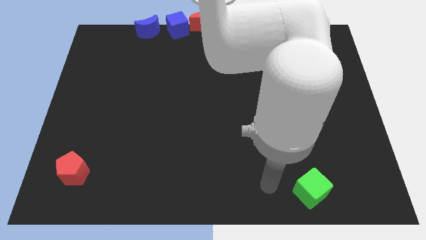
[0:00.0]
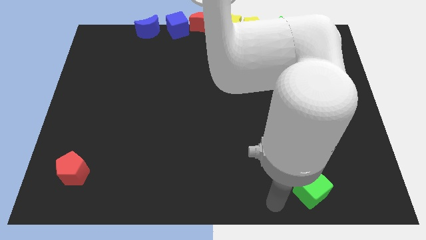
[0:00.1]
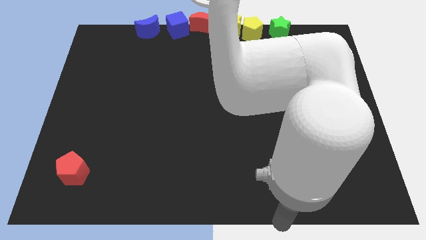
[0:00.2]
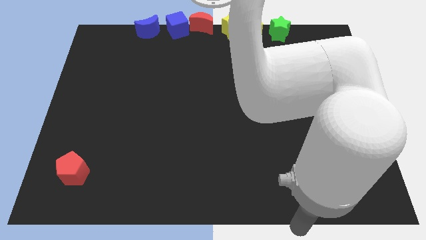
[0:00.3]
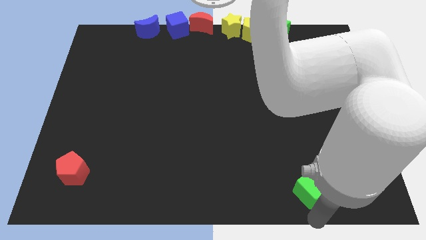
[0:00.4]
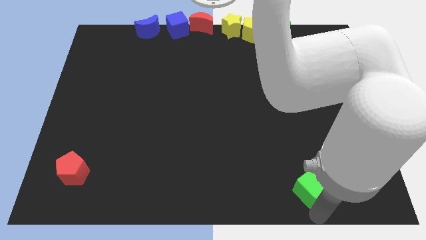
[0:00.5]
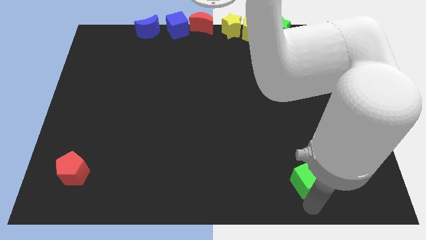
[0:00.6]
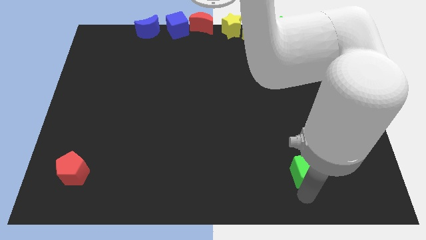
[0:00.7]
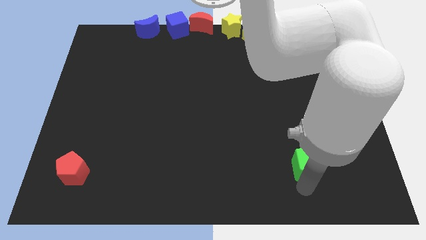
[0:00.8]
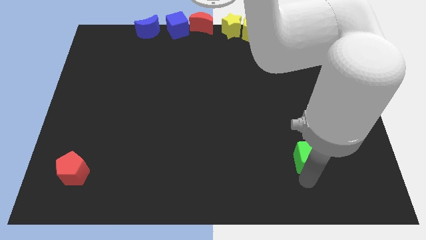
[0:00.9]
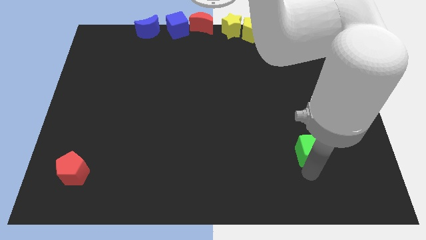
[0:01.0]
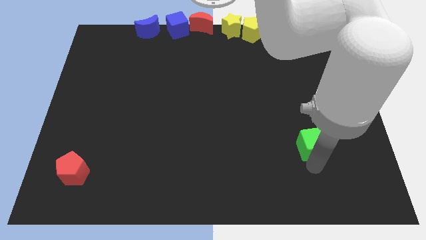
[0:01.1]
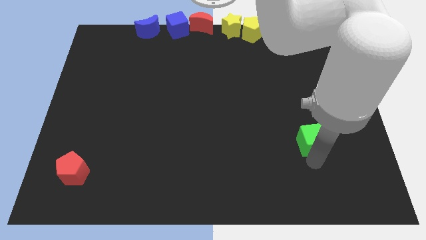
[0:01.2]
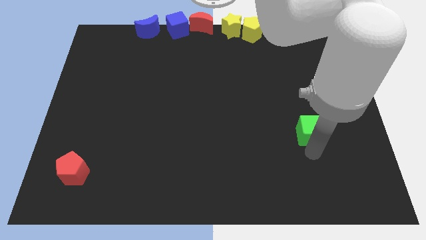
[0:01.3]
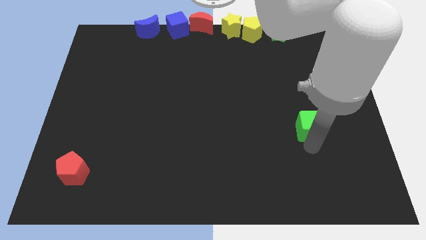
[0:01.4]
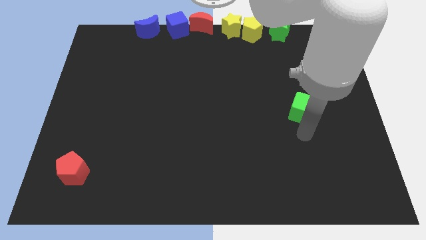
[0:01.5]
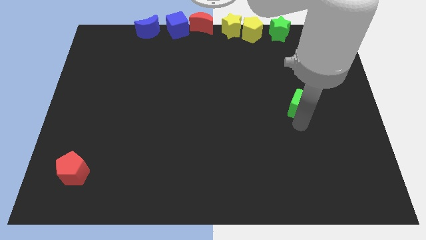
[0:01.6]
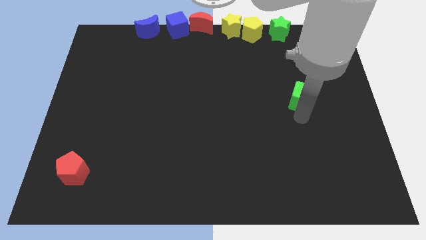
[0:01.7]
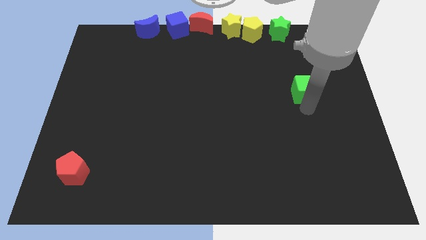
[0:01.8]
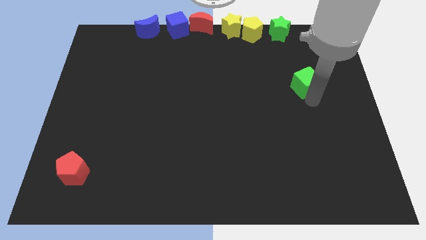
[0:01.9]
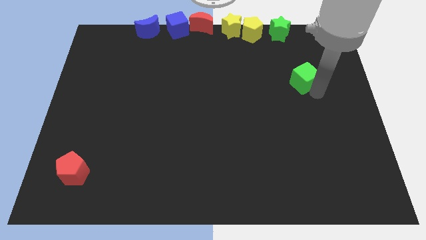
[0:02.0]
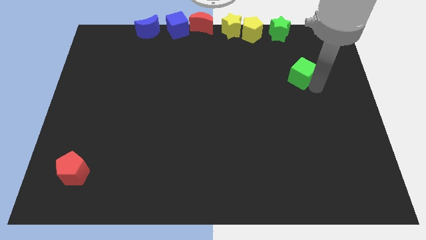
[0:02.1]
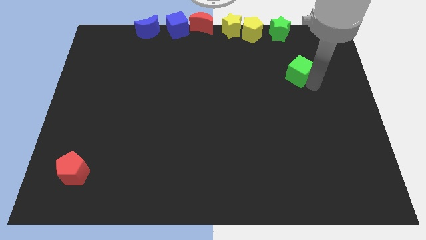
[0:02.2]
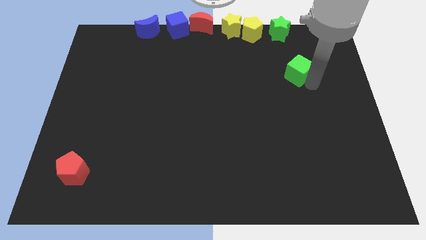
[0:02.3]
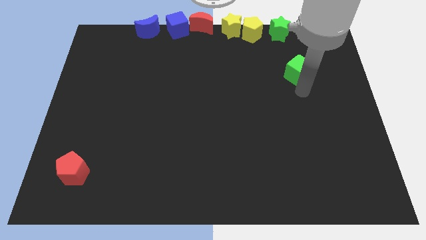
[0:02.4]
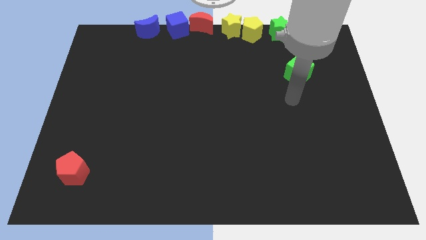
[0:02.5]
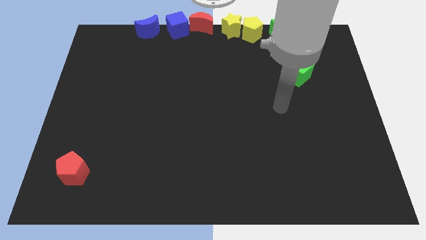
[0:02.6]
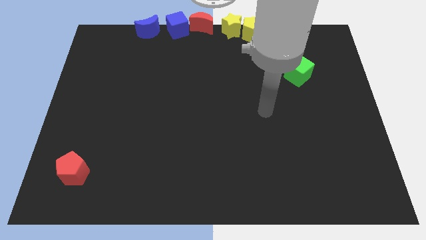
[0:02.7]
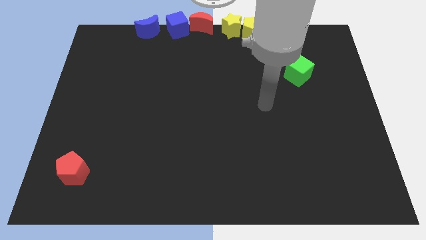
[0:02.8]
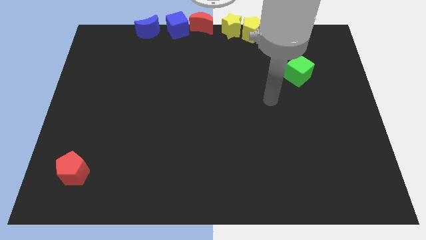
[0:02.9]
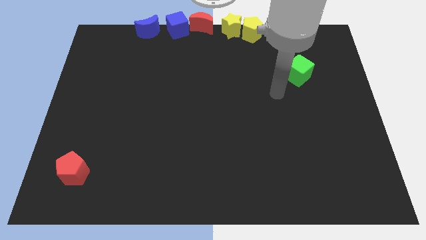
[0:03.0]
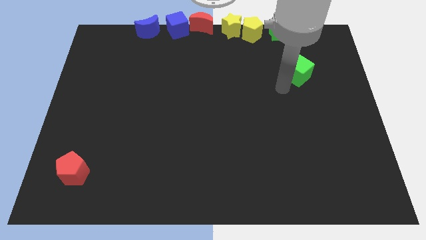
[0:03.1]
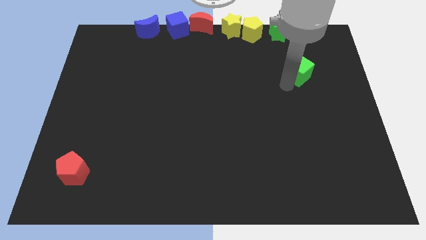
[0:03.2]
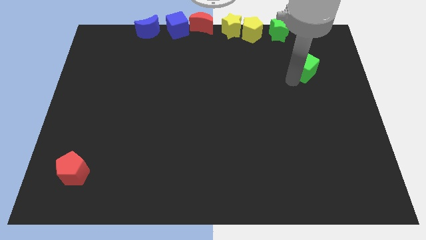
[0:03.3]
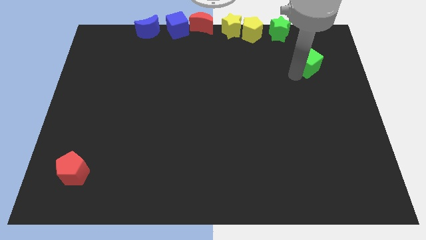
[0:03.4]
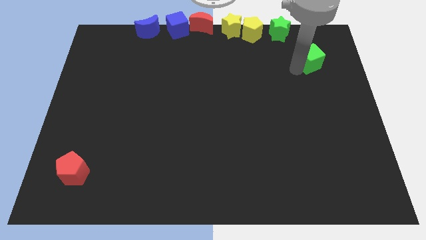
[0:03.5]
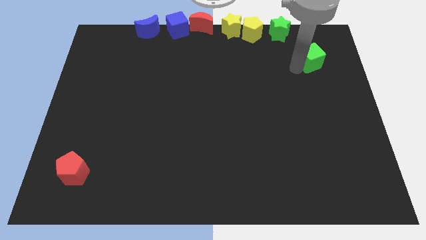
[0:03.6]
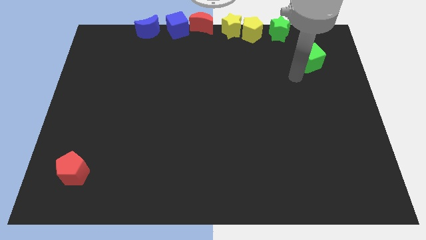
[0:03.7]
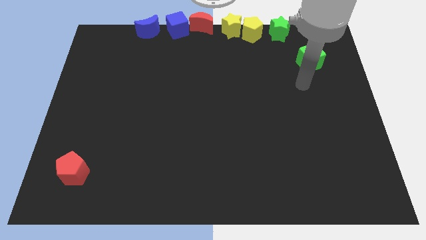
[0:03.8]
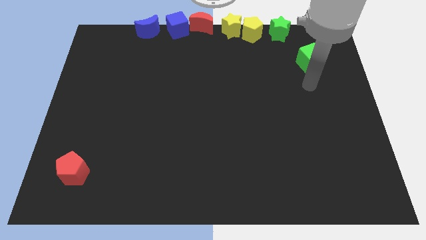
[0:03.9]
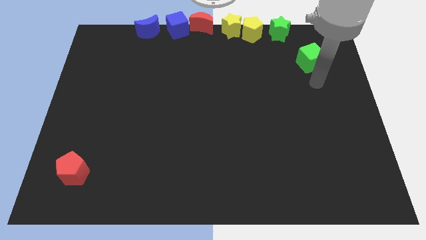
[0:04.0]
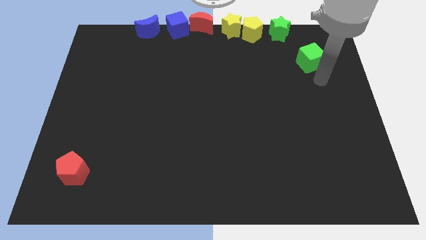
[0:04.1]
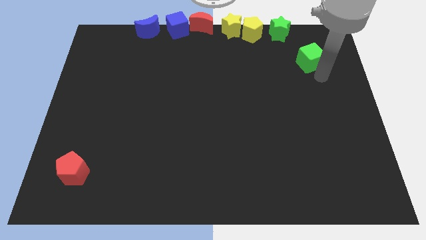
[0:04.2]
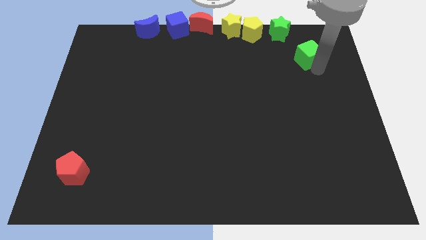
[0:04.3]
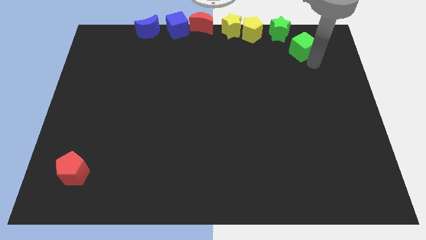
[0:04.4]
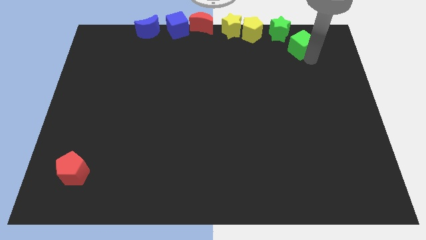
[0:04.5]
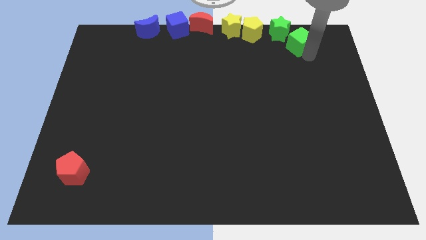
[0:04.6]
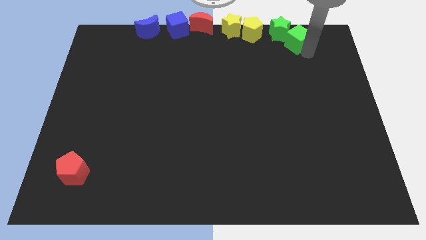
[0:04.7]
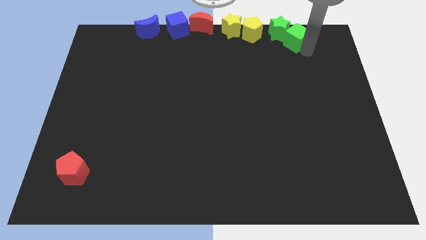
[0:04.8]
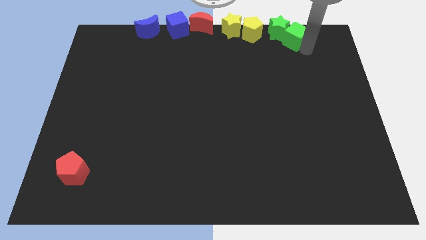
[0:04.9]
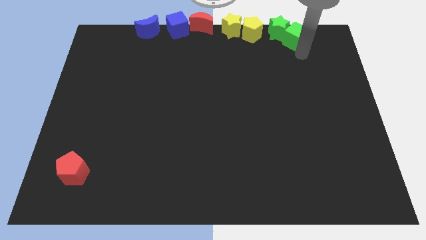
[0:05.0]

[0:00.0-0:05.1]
push the green cube into the green star

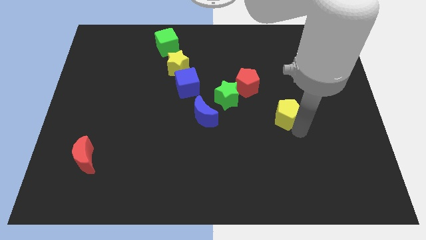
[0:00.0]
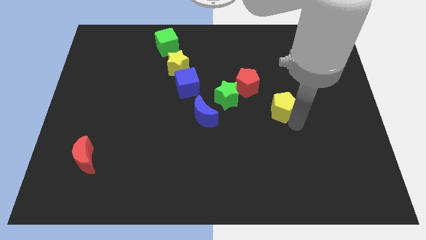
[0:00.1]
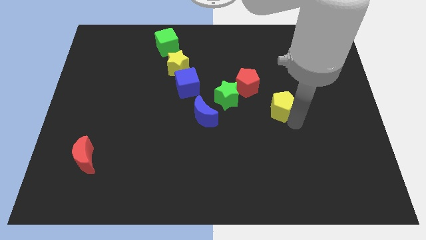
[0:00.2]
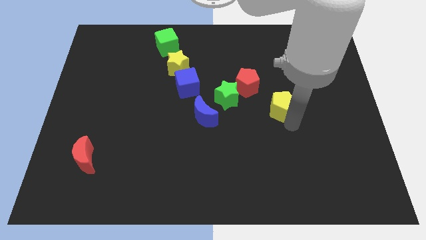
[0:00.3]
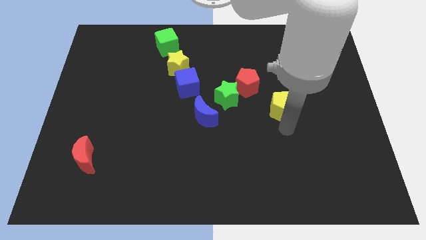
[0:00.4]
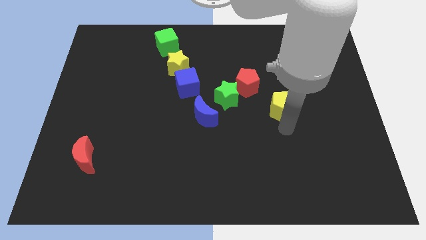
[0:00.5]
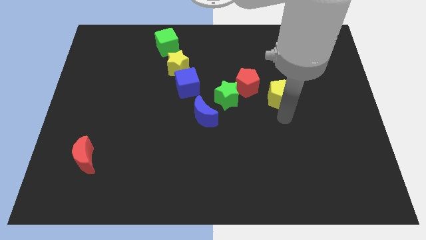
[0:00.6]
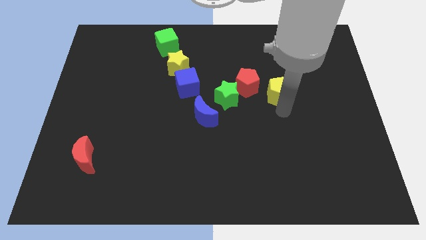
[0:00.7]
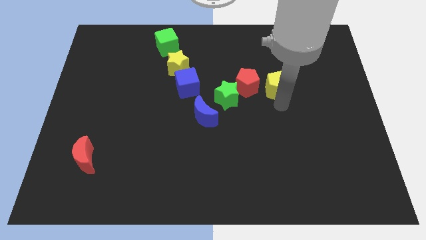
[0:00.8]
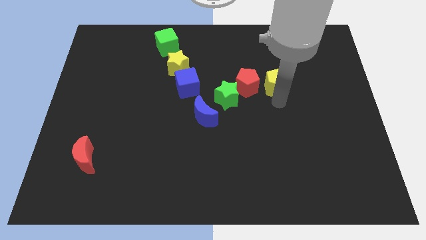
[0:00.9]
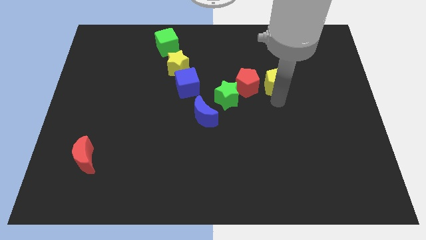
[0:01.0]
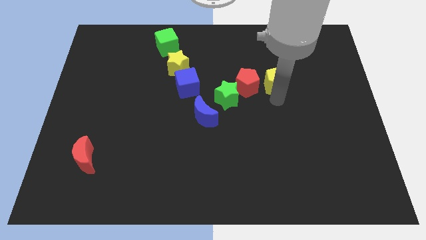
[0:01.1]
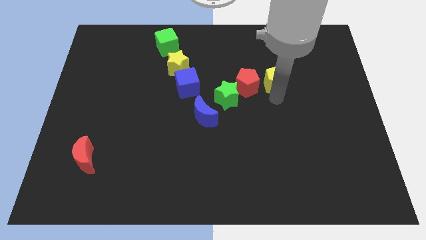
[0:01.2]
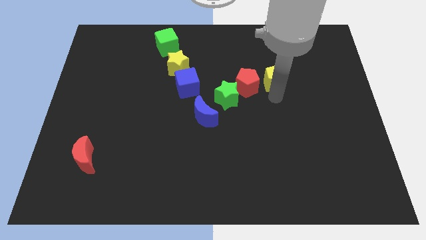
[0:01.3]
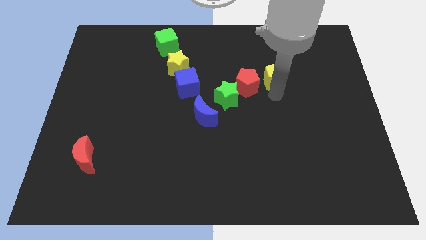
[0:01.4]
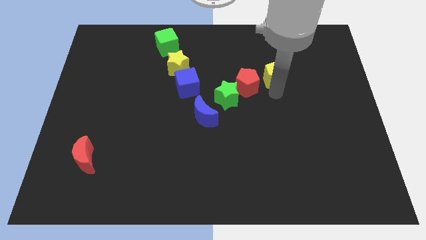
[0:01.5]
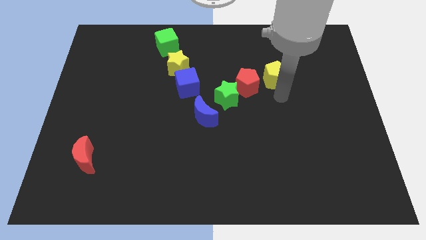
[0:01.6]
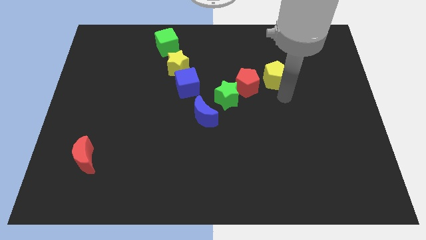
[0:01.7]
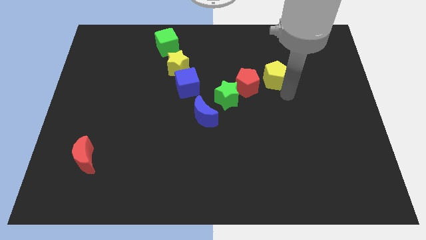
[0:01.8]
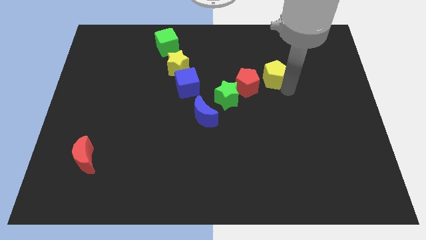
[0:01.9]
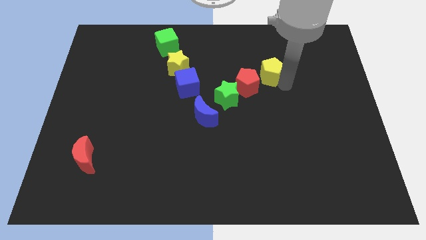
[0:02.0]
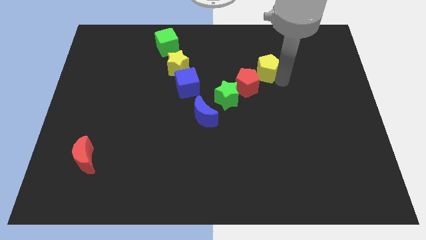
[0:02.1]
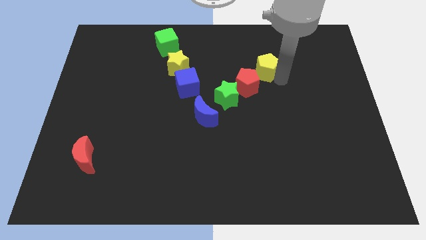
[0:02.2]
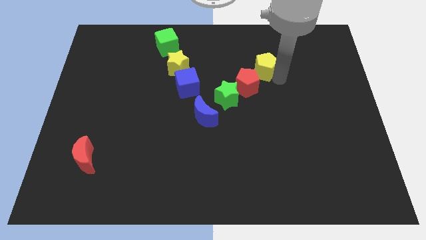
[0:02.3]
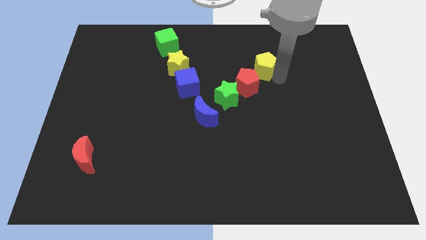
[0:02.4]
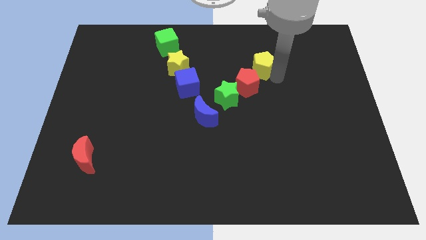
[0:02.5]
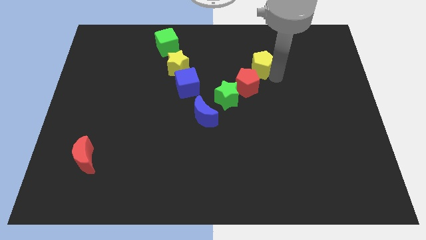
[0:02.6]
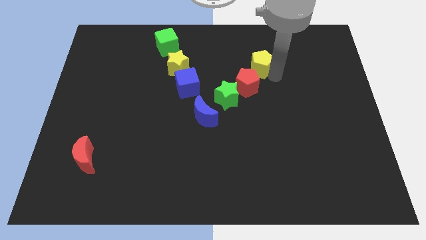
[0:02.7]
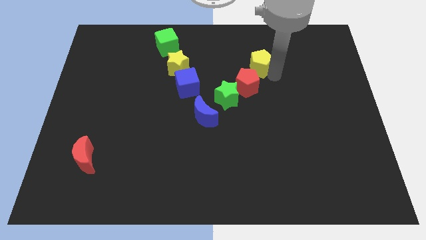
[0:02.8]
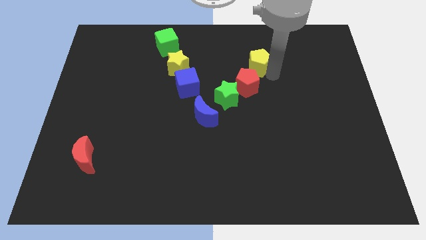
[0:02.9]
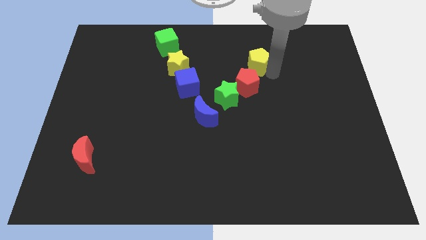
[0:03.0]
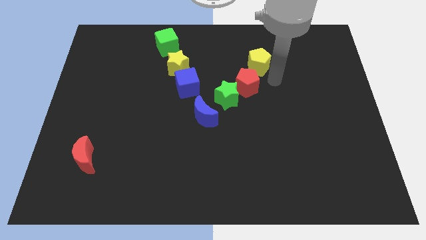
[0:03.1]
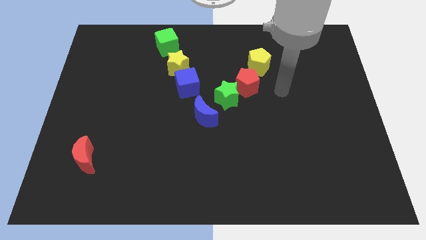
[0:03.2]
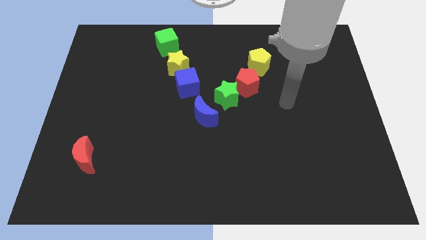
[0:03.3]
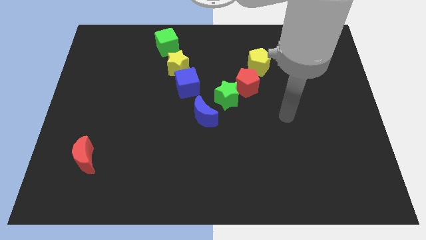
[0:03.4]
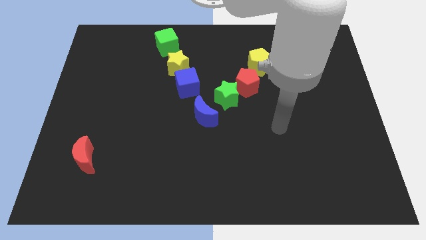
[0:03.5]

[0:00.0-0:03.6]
move the yellow pentagon to the top right side of the red pentagon

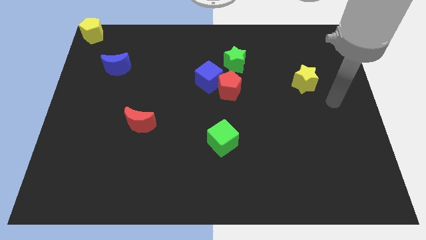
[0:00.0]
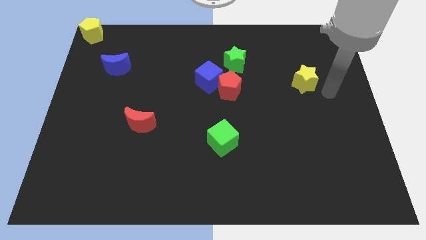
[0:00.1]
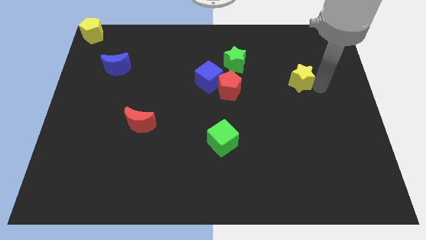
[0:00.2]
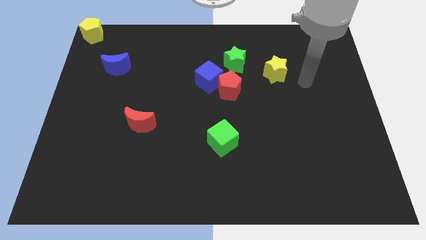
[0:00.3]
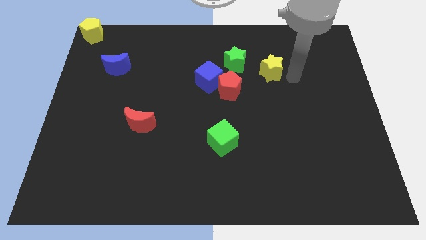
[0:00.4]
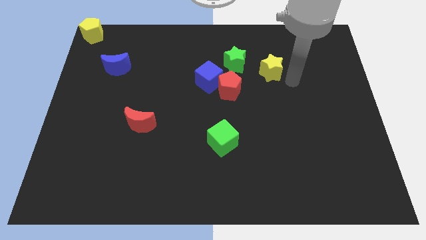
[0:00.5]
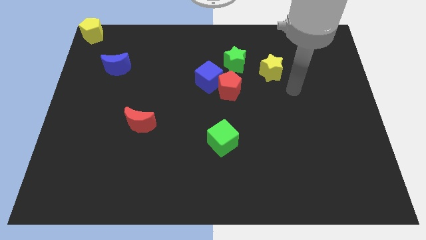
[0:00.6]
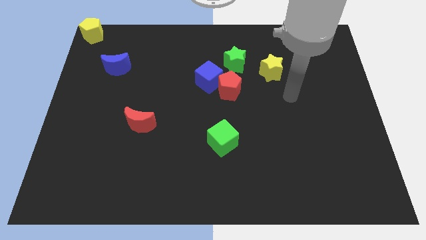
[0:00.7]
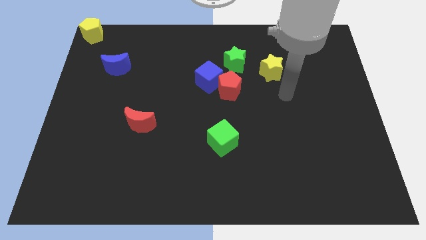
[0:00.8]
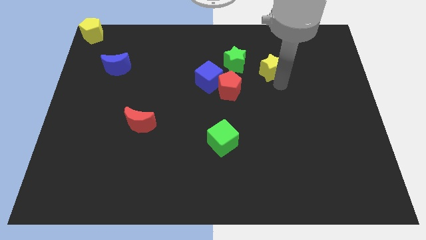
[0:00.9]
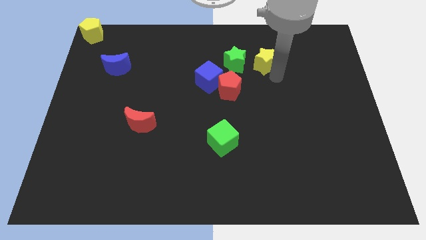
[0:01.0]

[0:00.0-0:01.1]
move yellow star on left side of the board
